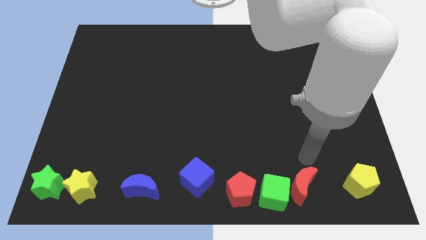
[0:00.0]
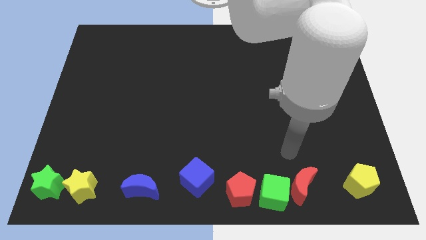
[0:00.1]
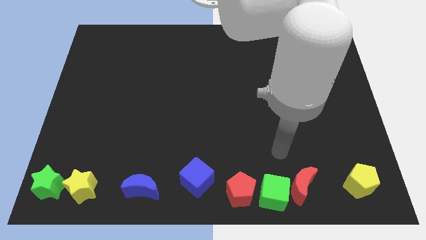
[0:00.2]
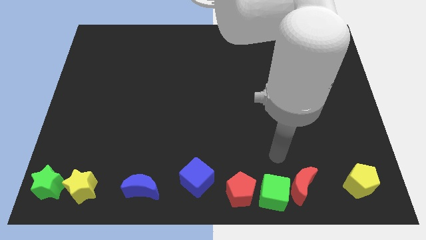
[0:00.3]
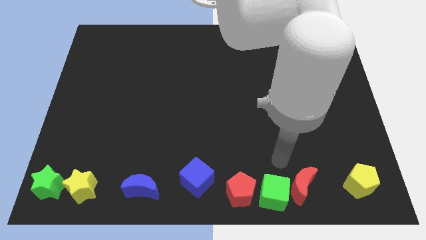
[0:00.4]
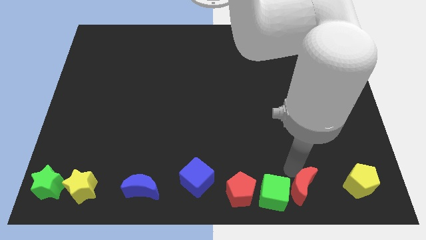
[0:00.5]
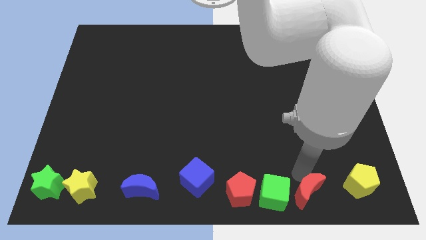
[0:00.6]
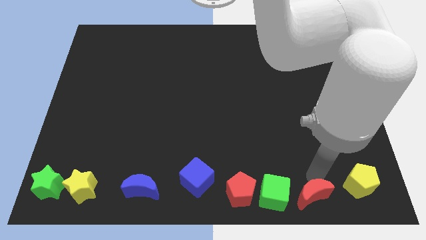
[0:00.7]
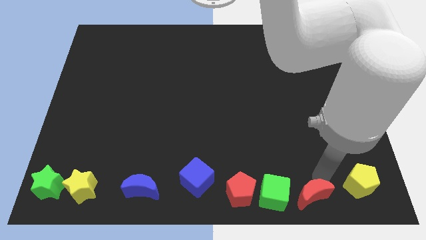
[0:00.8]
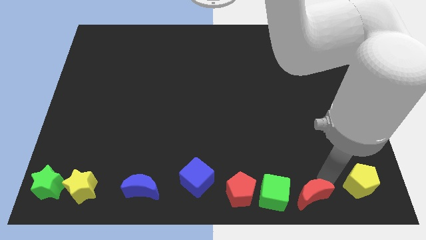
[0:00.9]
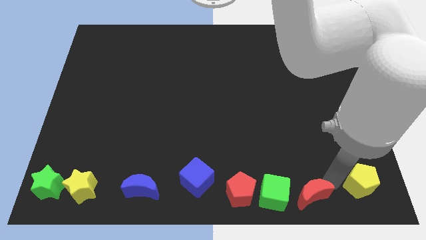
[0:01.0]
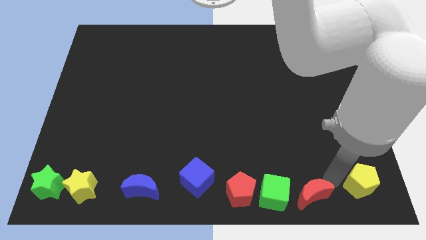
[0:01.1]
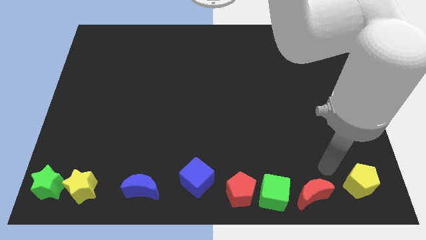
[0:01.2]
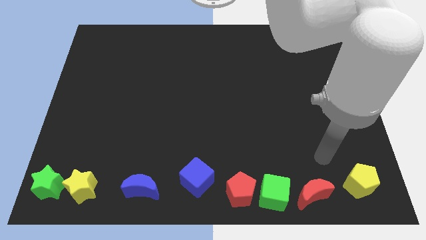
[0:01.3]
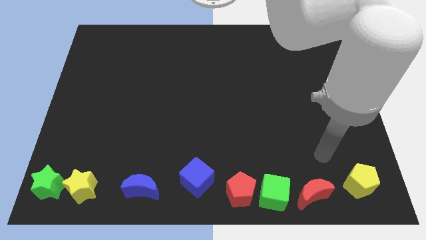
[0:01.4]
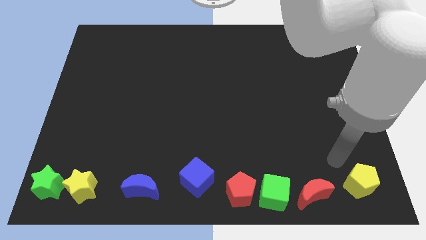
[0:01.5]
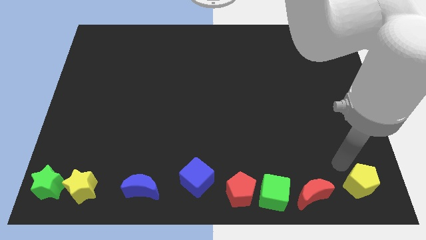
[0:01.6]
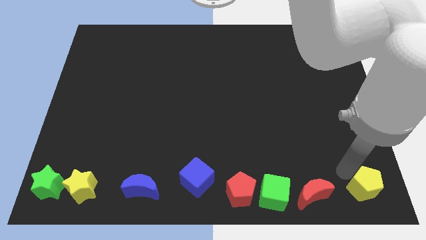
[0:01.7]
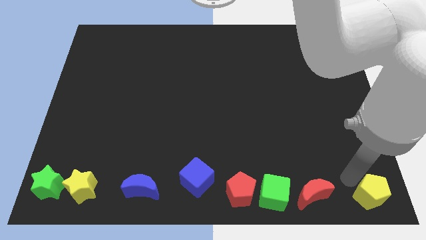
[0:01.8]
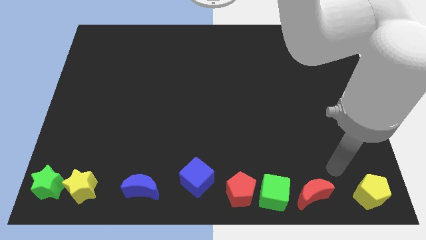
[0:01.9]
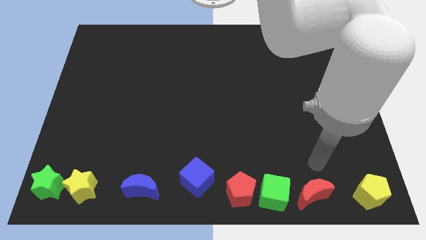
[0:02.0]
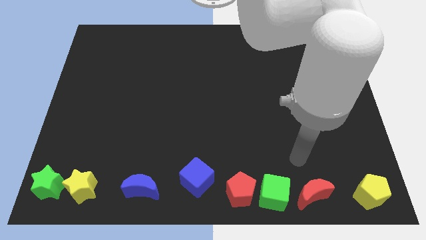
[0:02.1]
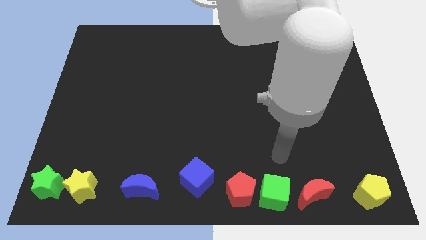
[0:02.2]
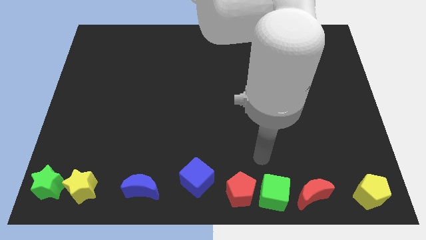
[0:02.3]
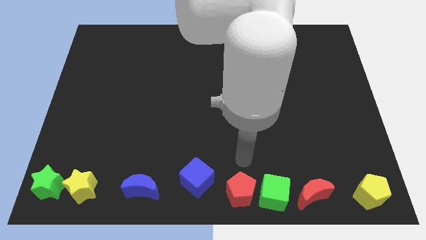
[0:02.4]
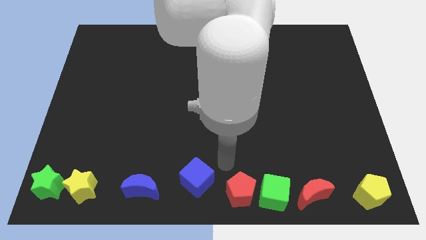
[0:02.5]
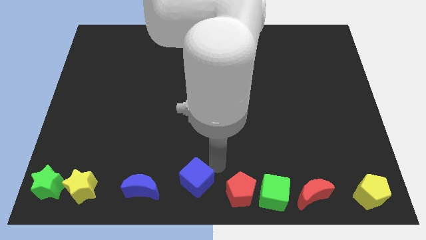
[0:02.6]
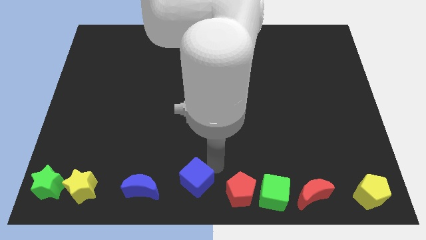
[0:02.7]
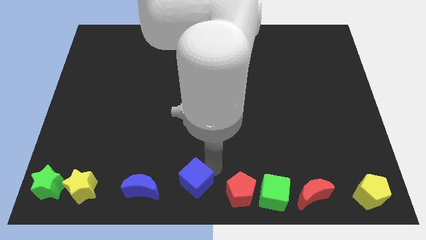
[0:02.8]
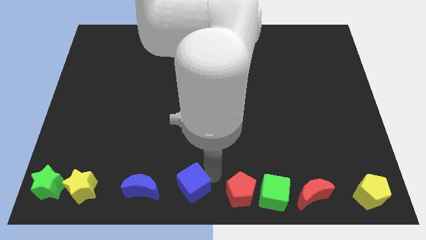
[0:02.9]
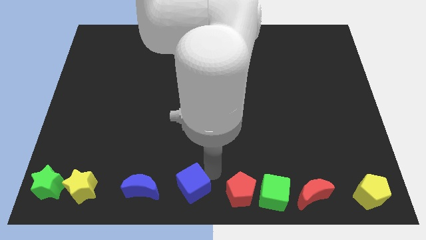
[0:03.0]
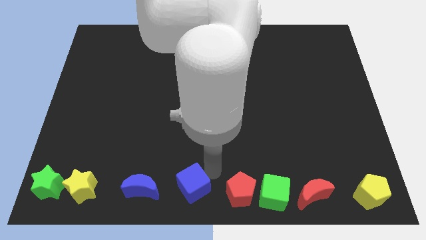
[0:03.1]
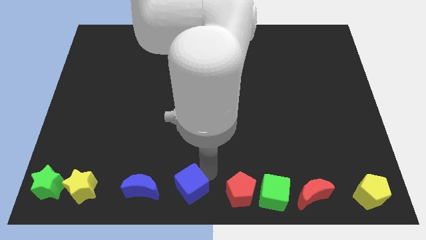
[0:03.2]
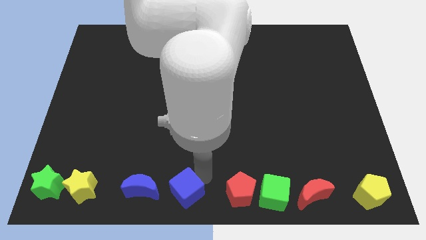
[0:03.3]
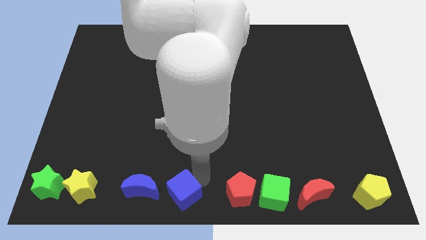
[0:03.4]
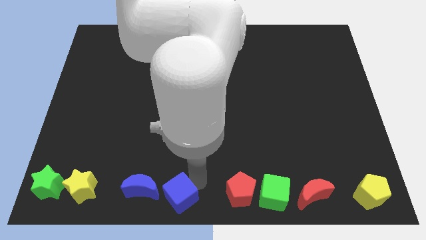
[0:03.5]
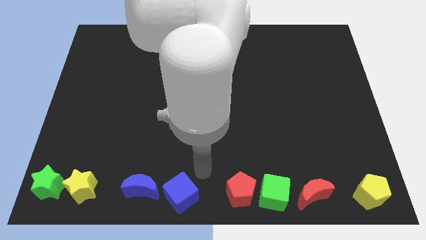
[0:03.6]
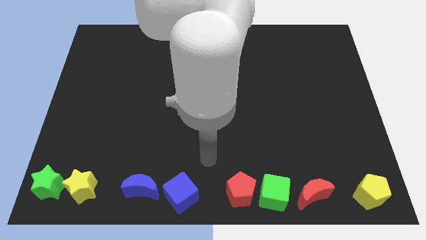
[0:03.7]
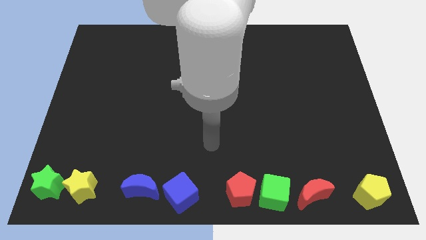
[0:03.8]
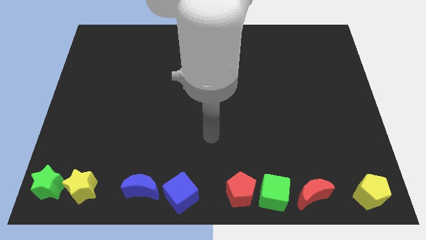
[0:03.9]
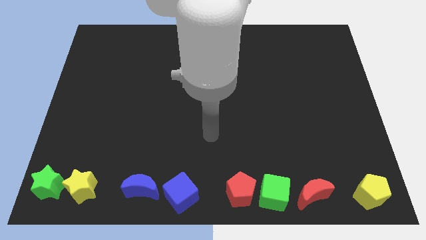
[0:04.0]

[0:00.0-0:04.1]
adjust the group of blocks to form a horizontal line

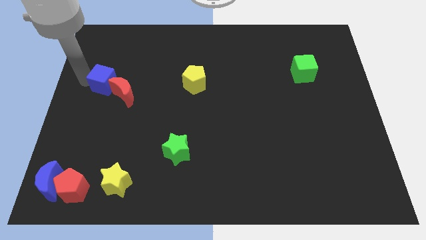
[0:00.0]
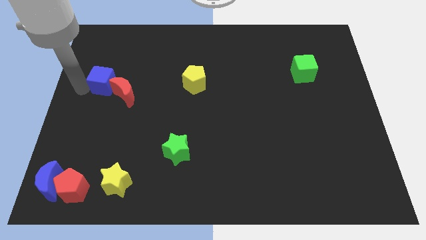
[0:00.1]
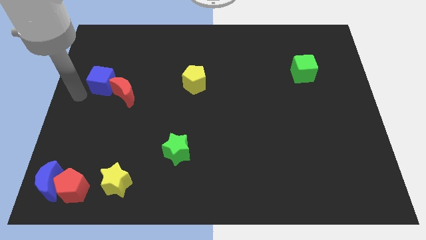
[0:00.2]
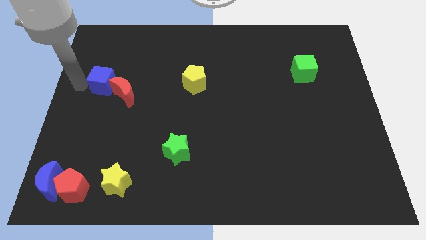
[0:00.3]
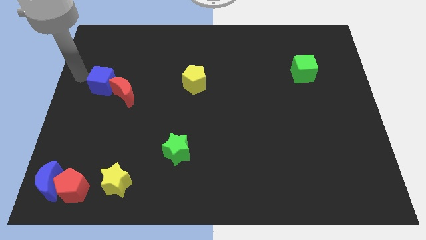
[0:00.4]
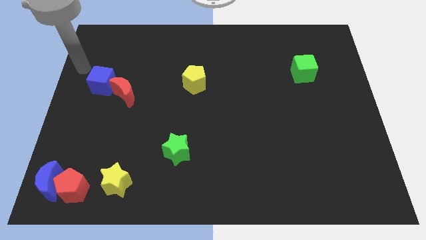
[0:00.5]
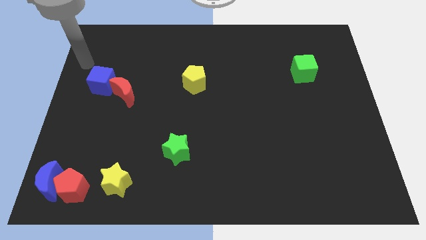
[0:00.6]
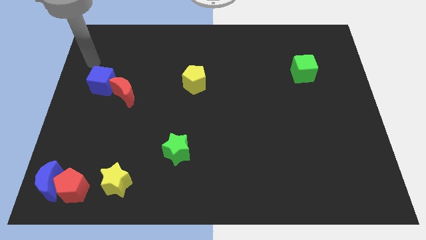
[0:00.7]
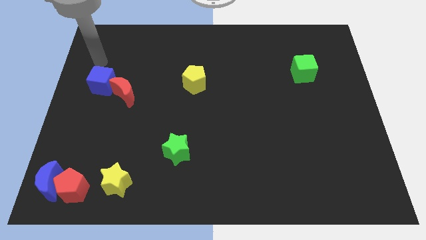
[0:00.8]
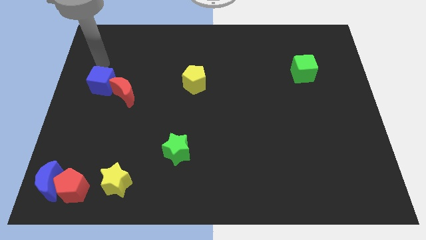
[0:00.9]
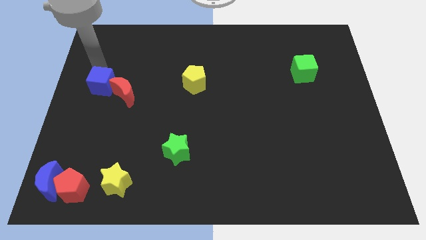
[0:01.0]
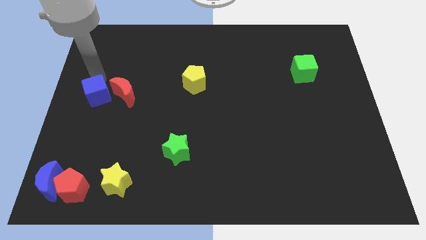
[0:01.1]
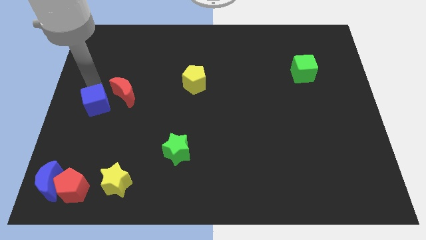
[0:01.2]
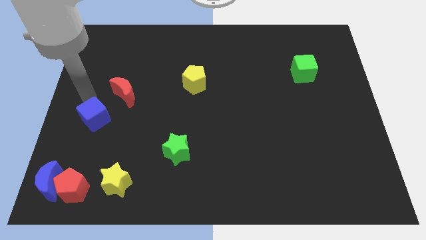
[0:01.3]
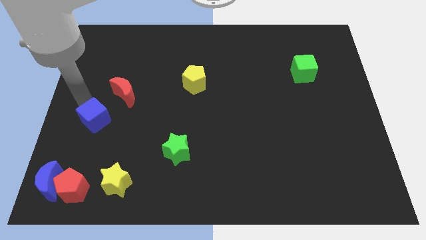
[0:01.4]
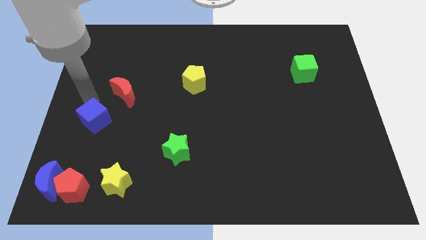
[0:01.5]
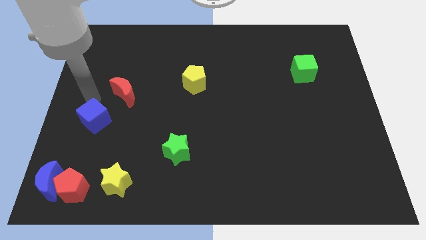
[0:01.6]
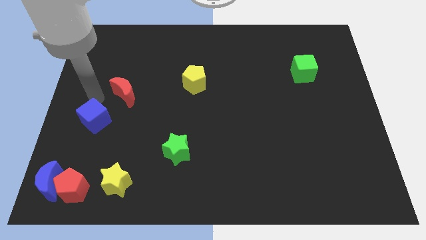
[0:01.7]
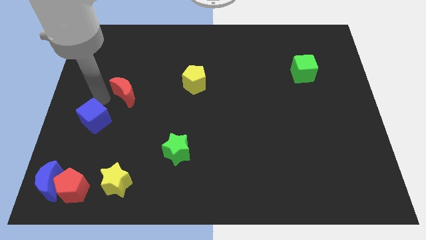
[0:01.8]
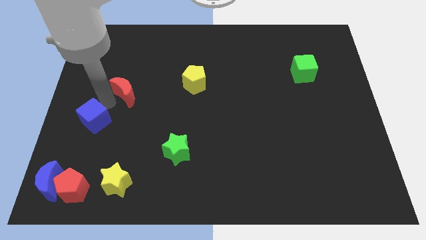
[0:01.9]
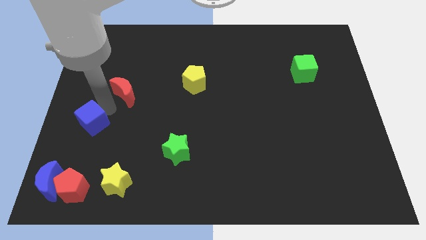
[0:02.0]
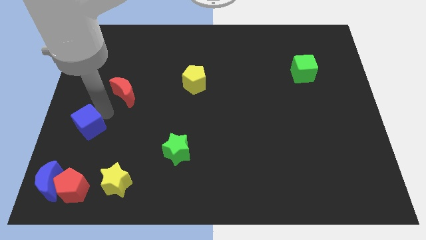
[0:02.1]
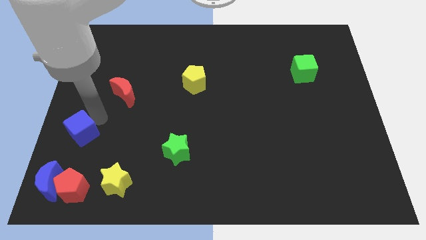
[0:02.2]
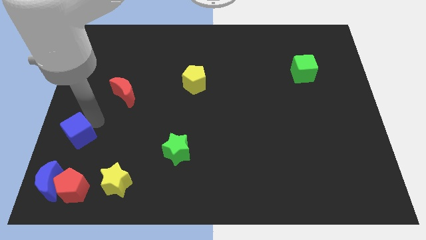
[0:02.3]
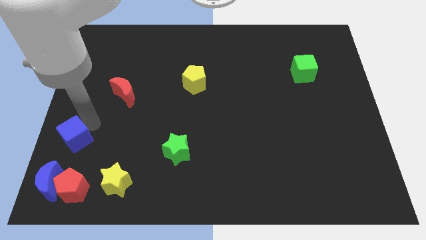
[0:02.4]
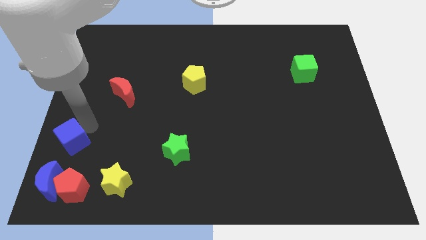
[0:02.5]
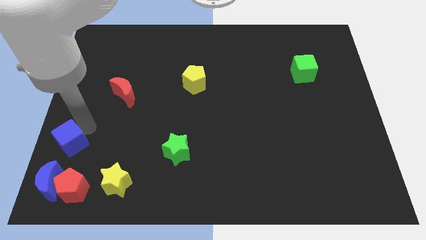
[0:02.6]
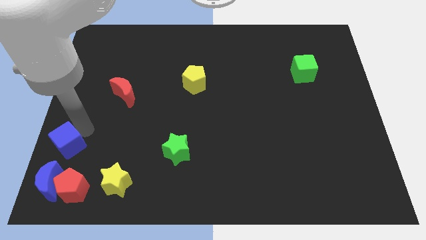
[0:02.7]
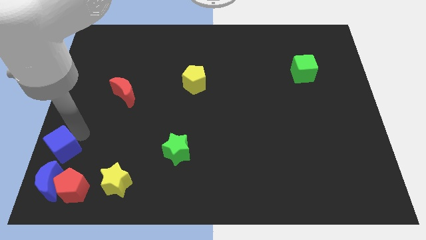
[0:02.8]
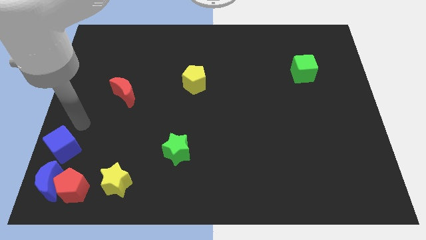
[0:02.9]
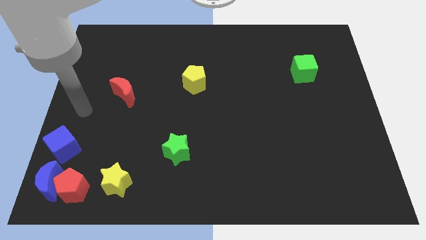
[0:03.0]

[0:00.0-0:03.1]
separate blue cube from red crescent

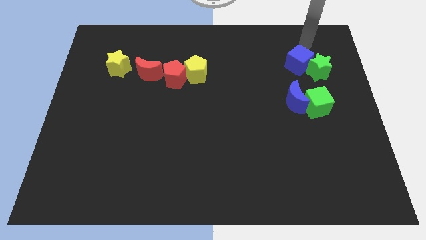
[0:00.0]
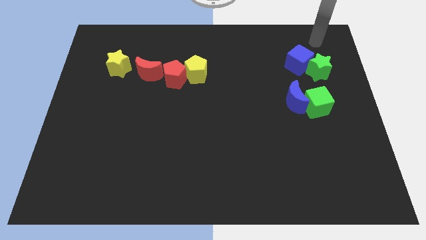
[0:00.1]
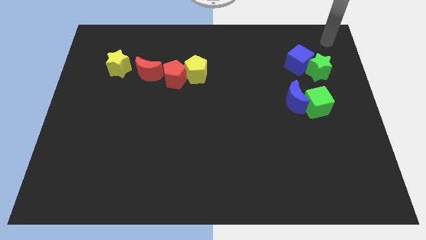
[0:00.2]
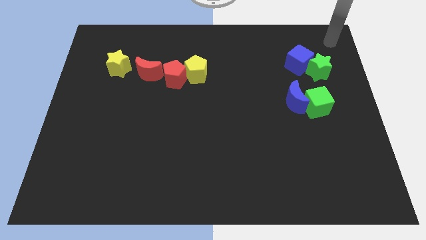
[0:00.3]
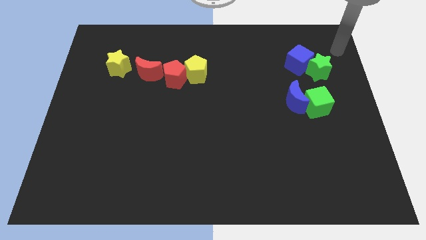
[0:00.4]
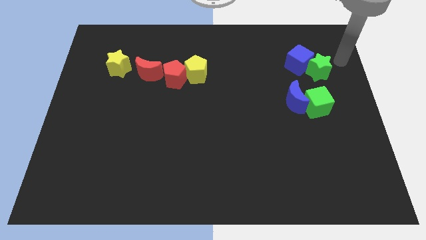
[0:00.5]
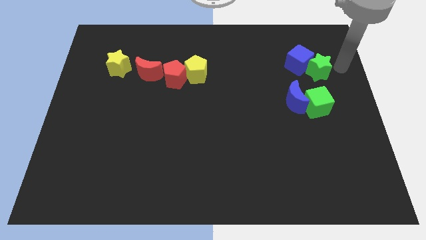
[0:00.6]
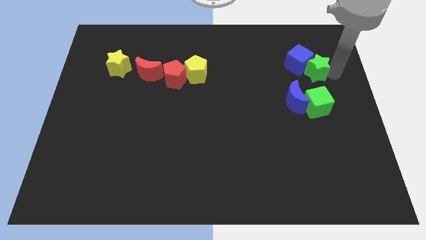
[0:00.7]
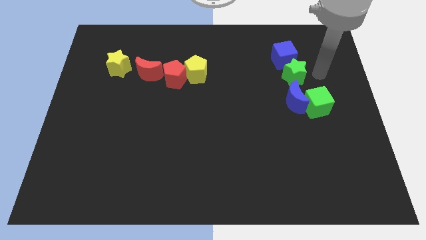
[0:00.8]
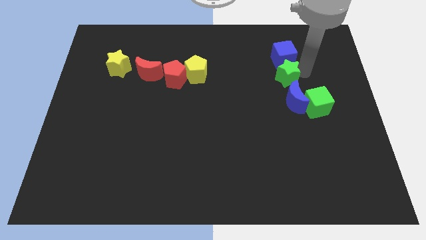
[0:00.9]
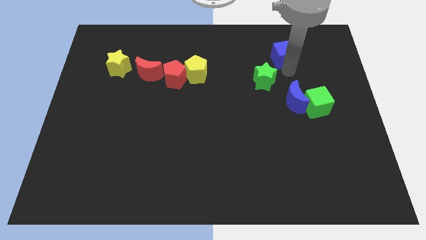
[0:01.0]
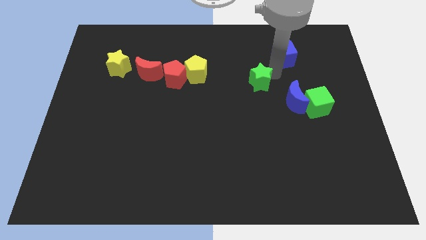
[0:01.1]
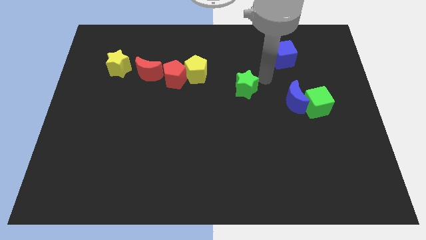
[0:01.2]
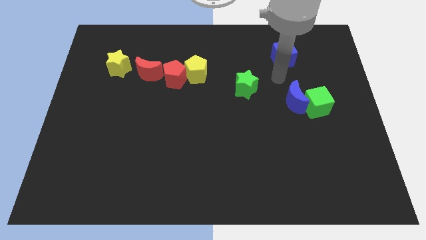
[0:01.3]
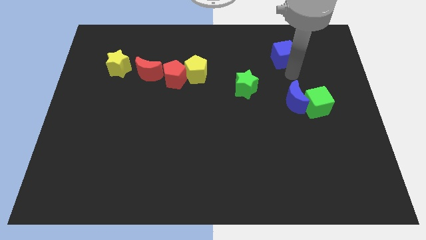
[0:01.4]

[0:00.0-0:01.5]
separate the green star from the blue cube

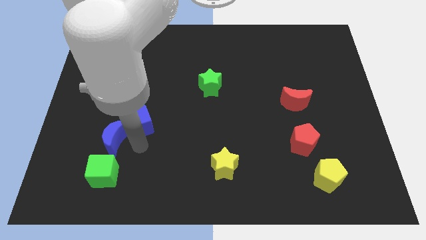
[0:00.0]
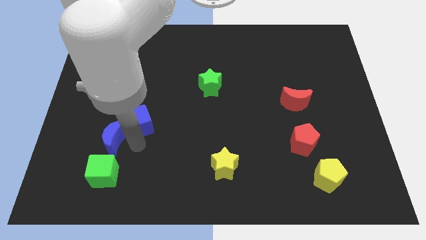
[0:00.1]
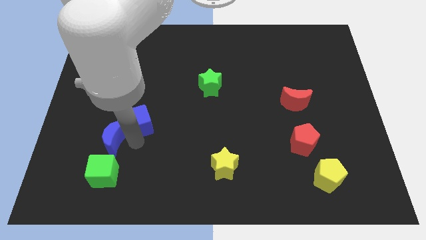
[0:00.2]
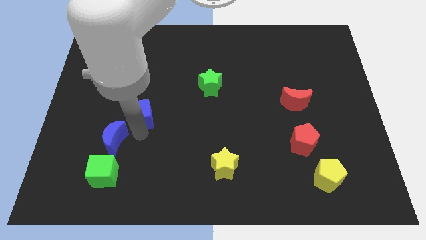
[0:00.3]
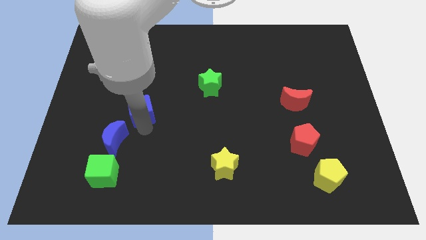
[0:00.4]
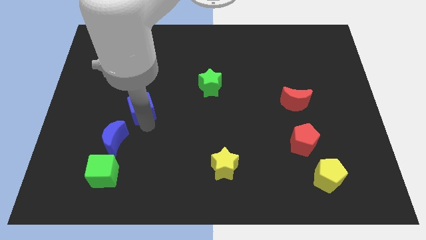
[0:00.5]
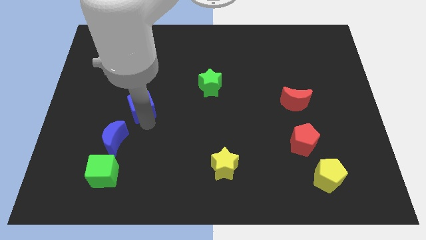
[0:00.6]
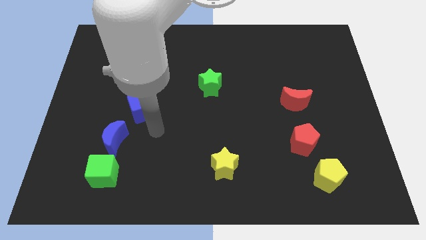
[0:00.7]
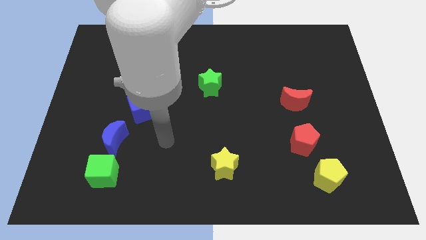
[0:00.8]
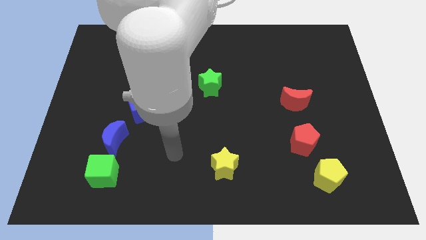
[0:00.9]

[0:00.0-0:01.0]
push the blue cube towards the top side of the board
